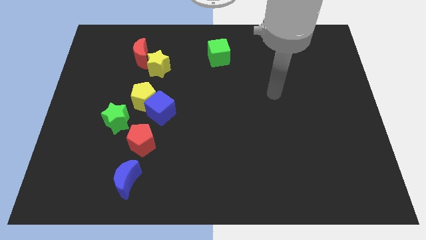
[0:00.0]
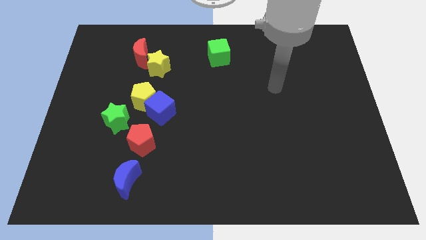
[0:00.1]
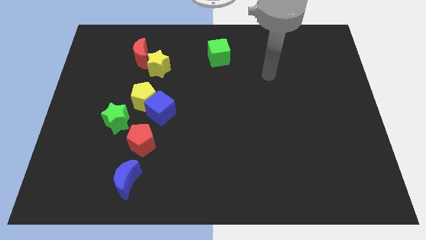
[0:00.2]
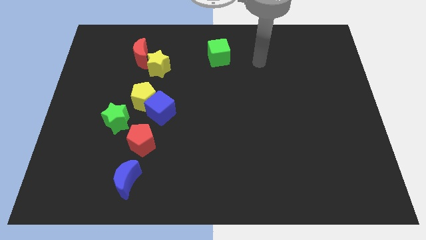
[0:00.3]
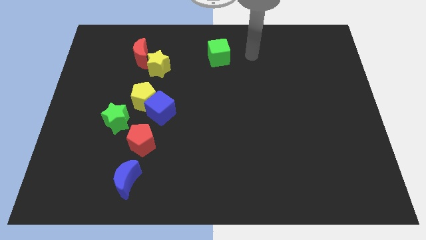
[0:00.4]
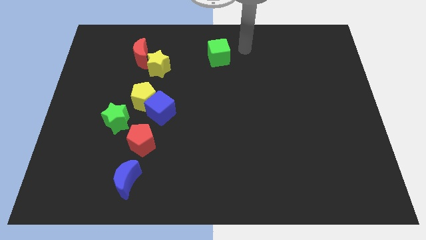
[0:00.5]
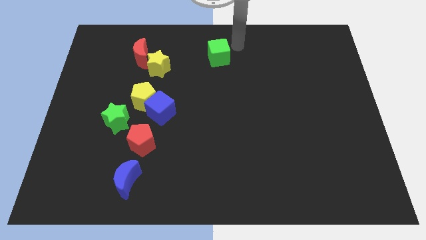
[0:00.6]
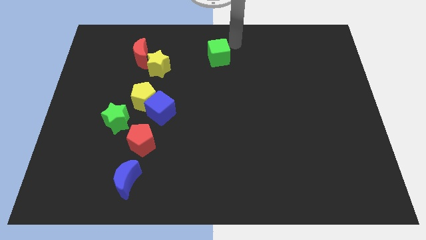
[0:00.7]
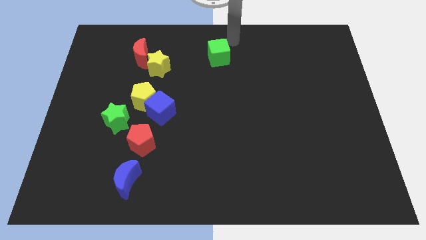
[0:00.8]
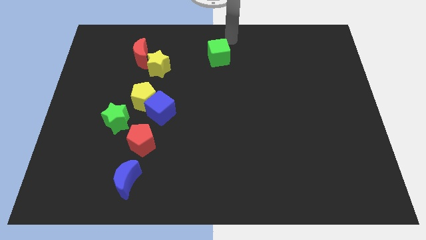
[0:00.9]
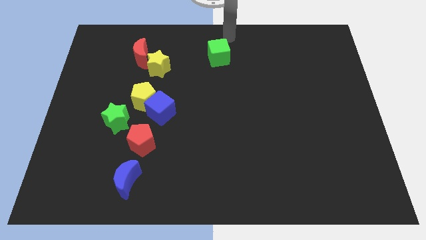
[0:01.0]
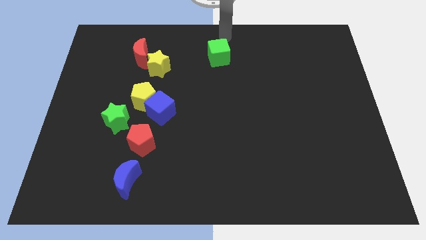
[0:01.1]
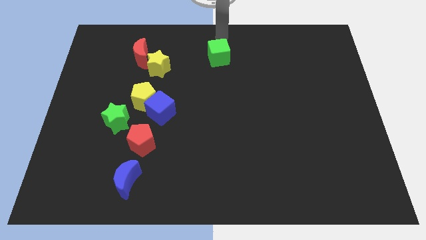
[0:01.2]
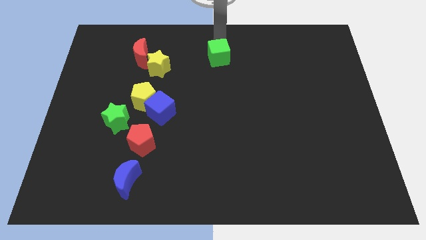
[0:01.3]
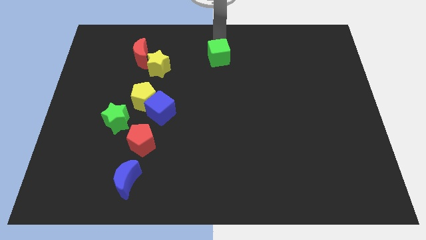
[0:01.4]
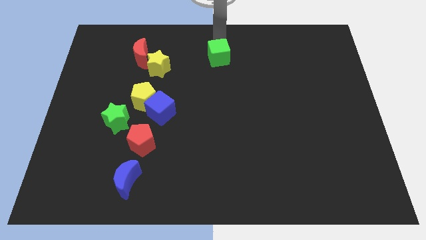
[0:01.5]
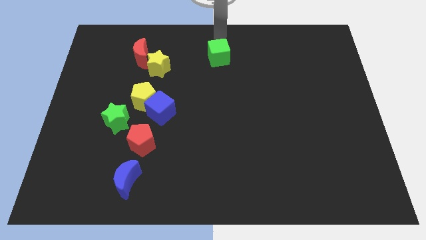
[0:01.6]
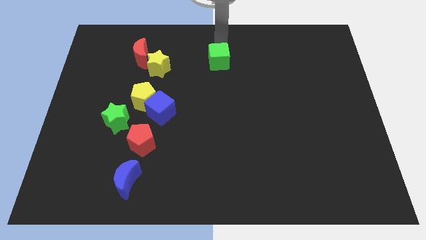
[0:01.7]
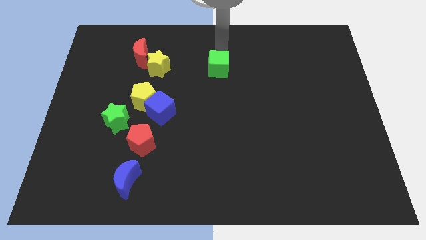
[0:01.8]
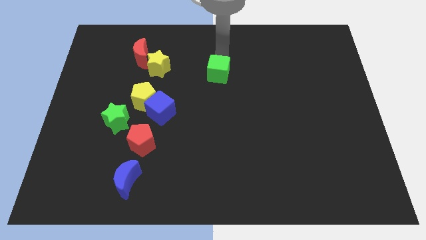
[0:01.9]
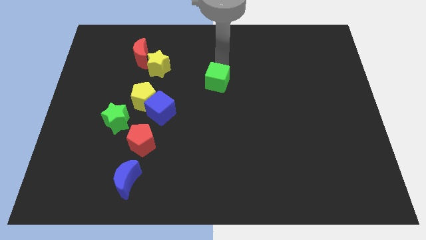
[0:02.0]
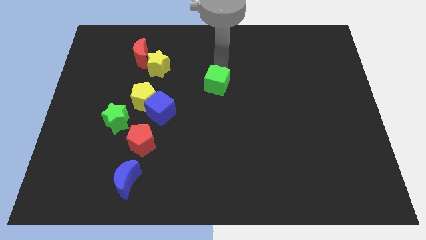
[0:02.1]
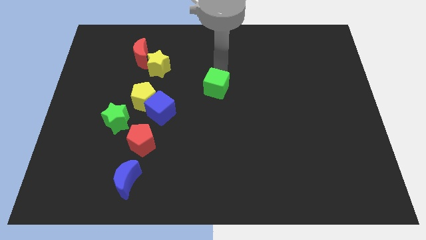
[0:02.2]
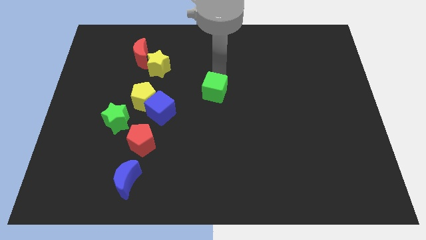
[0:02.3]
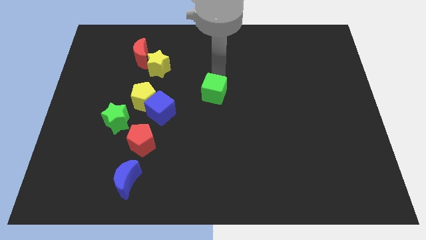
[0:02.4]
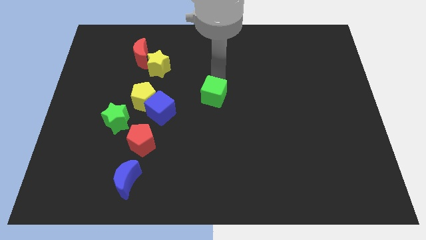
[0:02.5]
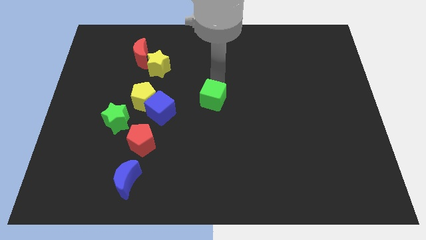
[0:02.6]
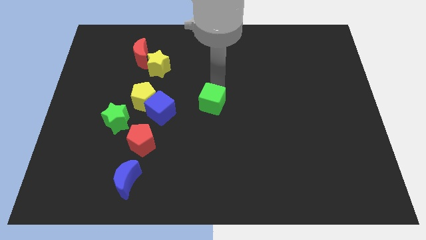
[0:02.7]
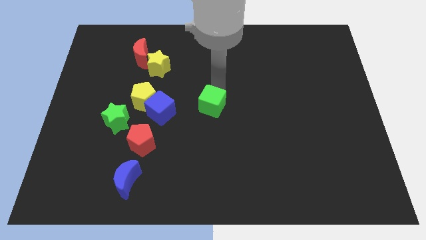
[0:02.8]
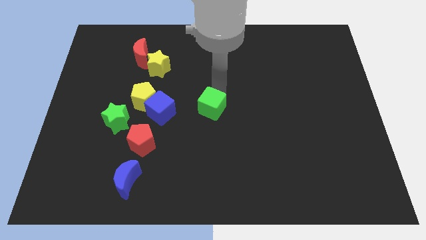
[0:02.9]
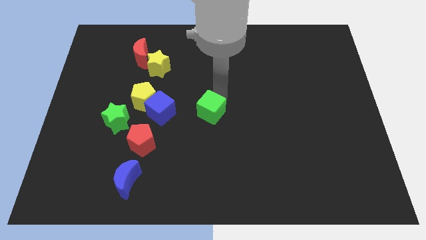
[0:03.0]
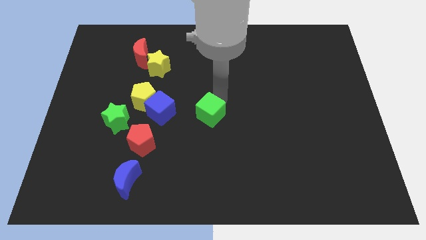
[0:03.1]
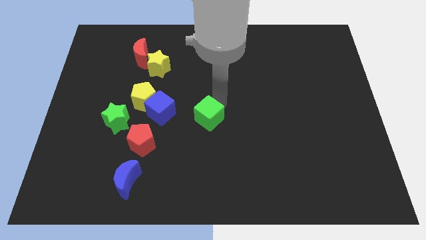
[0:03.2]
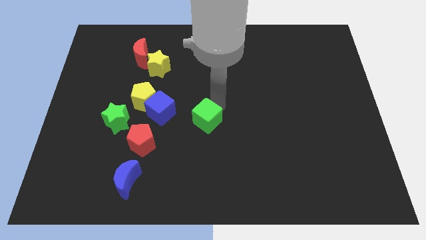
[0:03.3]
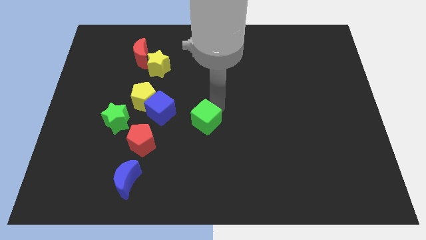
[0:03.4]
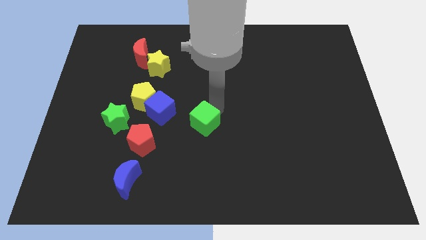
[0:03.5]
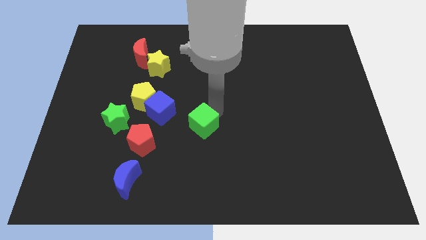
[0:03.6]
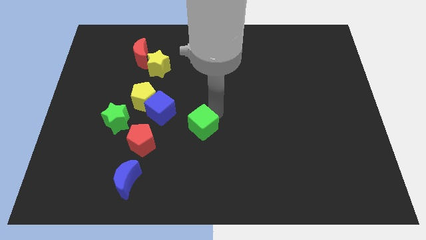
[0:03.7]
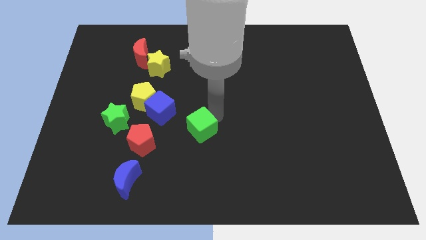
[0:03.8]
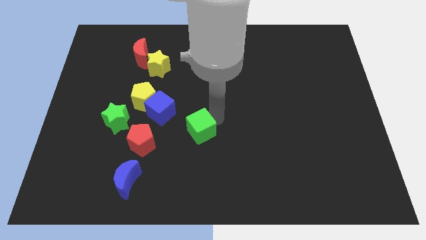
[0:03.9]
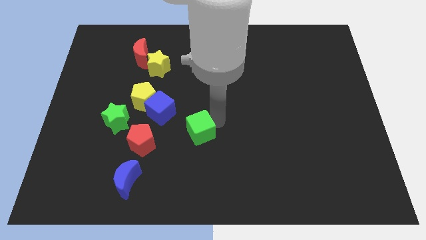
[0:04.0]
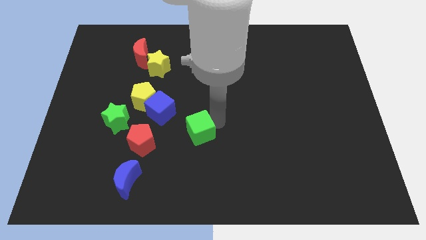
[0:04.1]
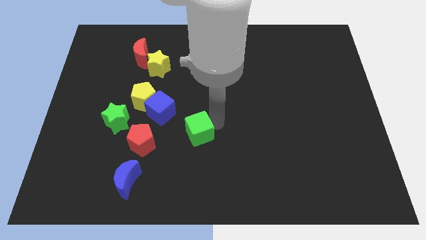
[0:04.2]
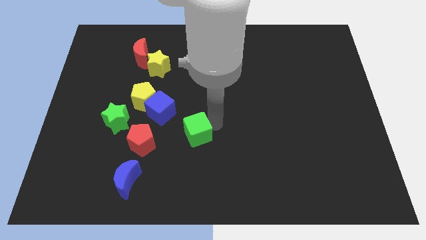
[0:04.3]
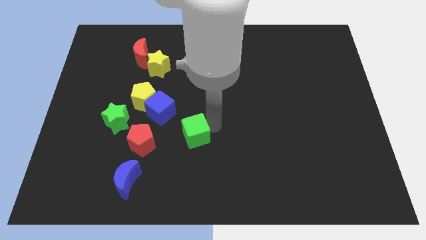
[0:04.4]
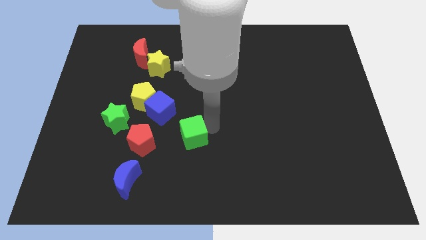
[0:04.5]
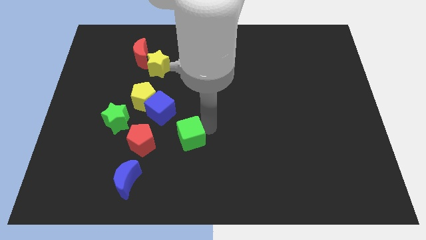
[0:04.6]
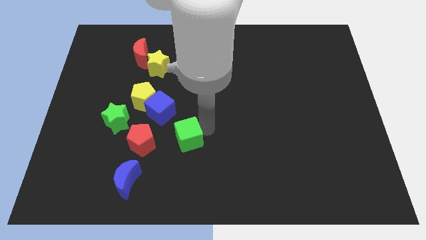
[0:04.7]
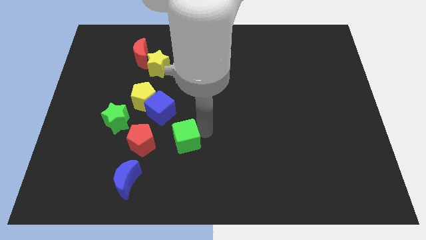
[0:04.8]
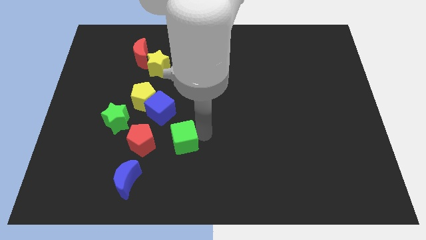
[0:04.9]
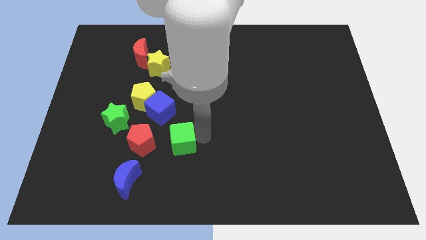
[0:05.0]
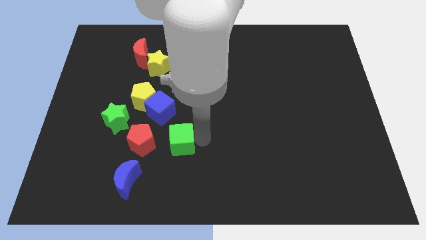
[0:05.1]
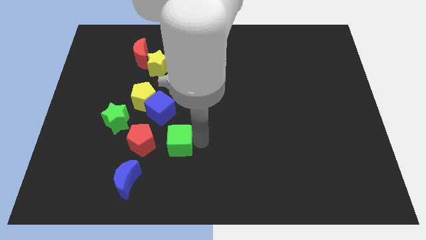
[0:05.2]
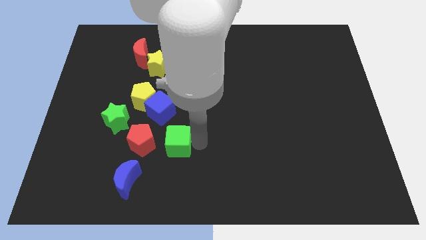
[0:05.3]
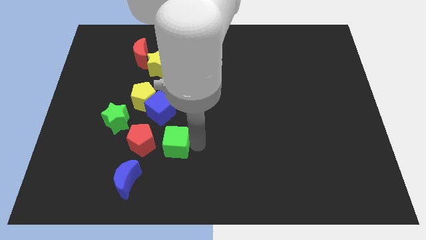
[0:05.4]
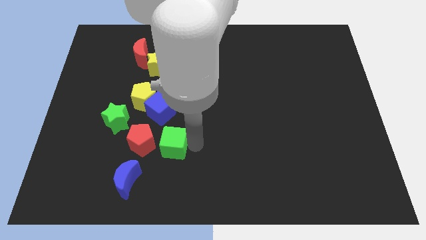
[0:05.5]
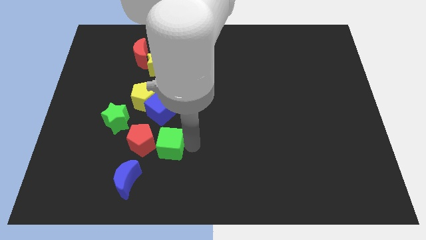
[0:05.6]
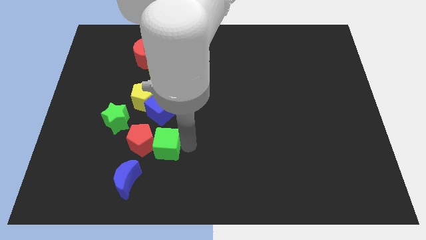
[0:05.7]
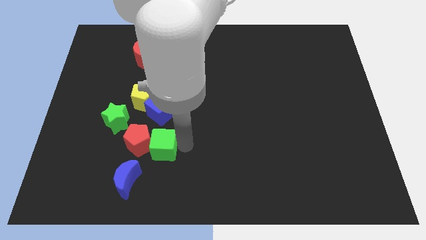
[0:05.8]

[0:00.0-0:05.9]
slide the green cube towards the red pentagon

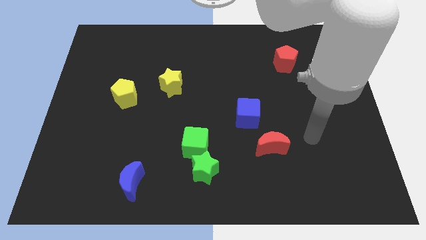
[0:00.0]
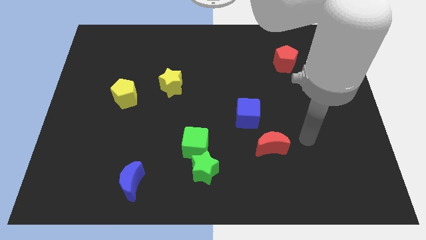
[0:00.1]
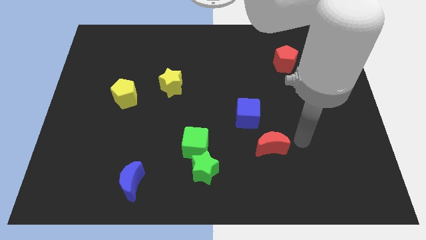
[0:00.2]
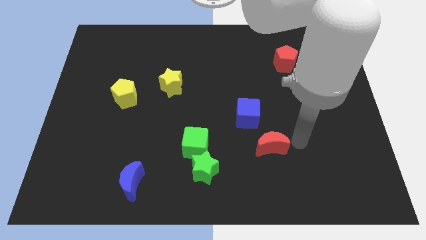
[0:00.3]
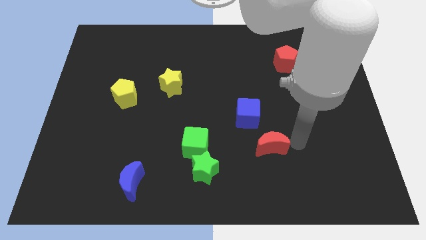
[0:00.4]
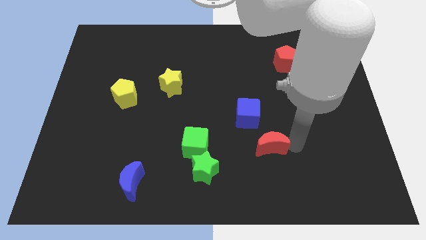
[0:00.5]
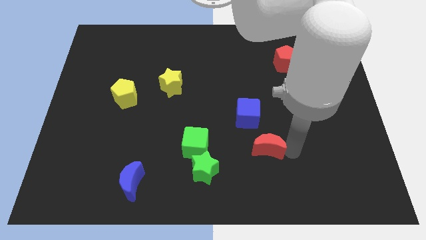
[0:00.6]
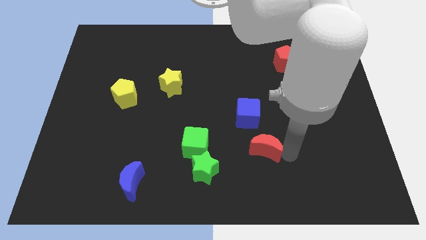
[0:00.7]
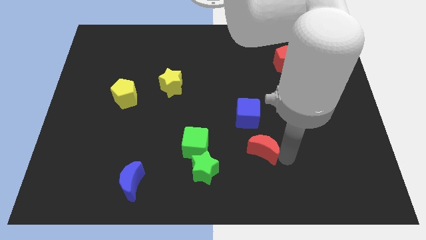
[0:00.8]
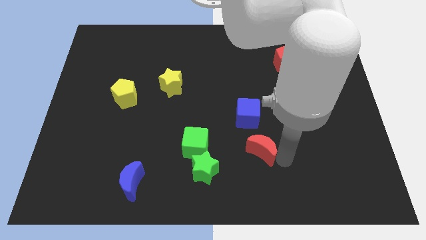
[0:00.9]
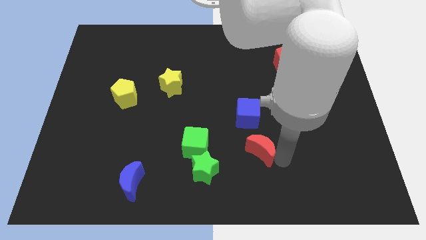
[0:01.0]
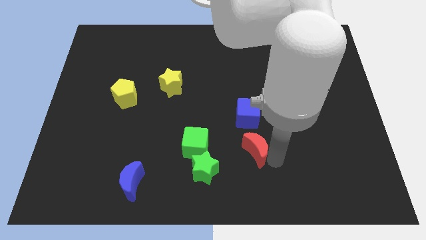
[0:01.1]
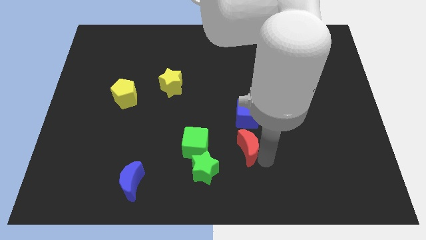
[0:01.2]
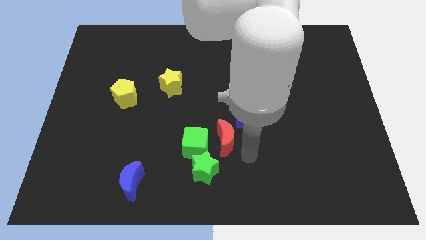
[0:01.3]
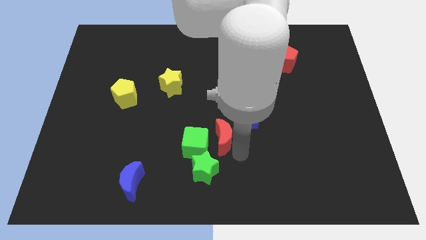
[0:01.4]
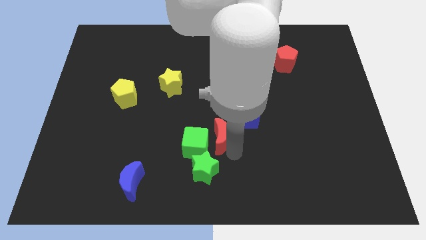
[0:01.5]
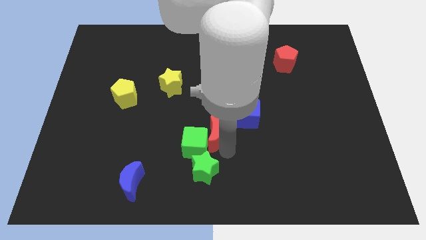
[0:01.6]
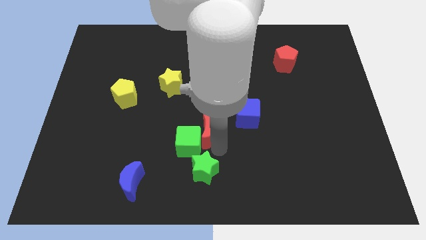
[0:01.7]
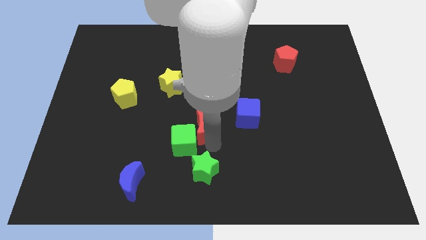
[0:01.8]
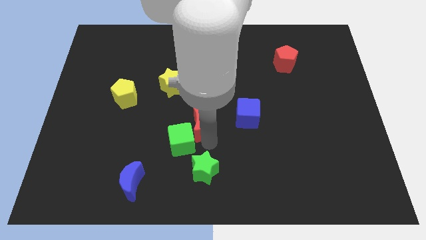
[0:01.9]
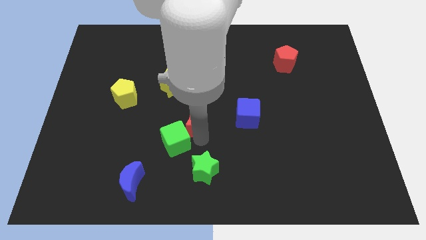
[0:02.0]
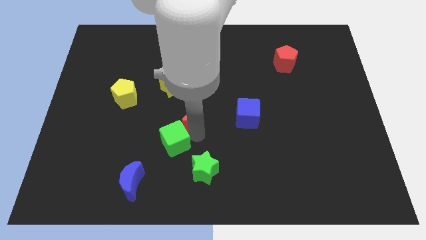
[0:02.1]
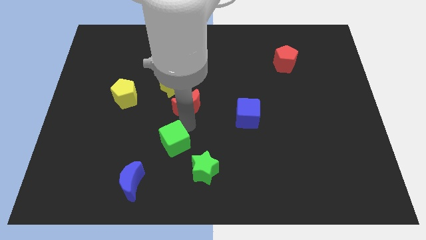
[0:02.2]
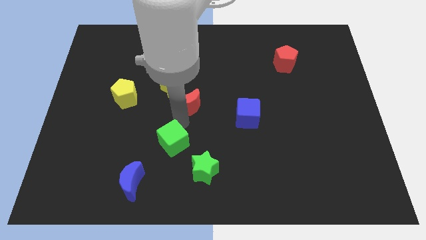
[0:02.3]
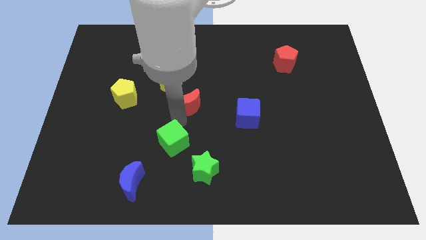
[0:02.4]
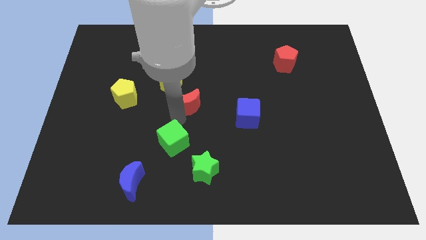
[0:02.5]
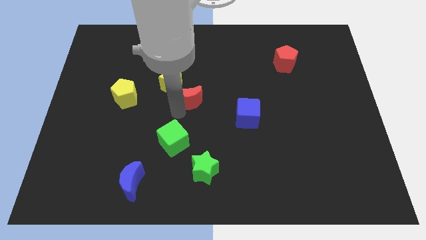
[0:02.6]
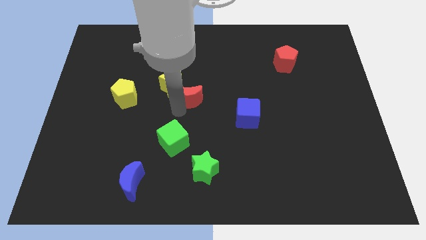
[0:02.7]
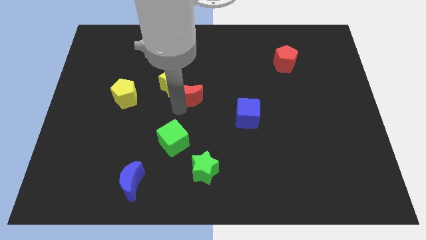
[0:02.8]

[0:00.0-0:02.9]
put the red moon towards the yellow star
